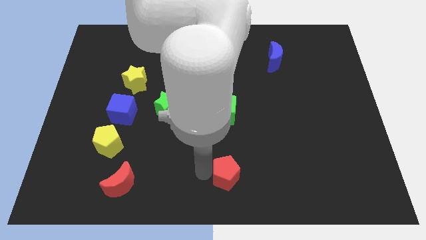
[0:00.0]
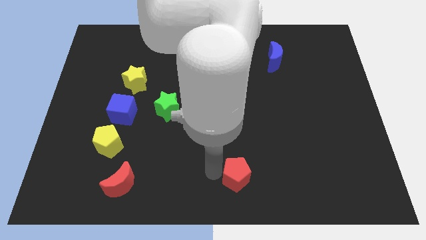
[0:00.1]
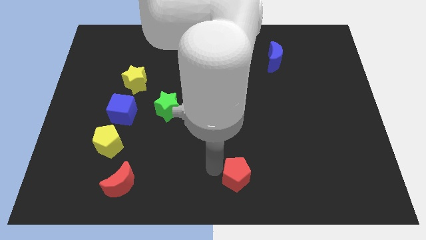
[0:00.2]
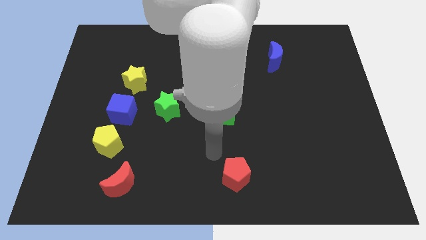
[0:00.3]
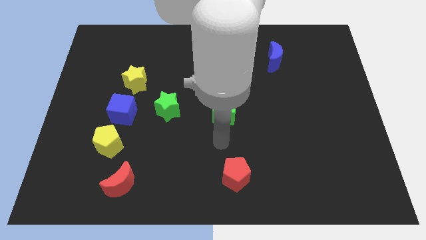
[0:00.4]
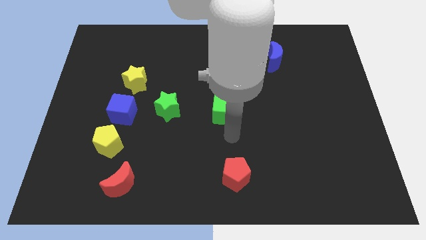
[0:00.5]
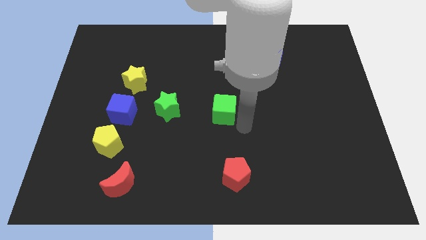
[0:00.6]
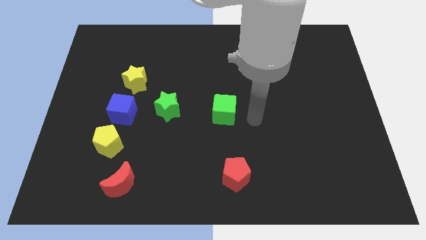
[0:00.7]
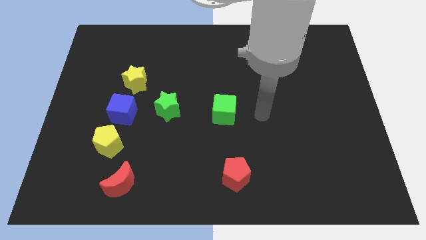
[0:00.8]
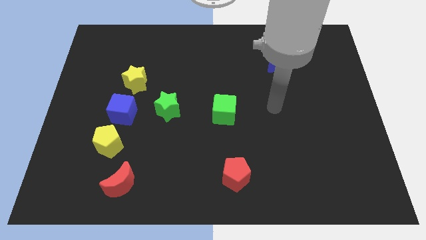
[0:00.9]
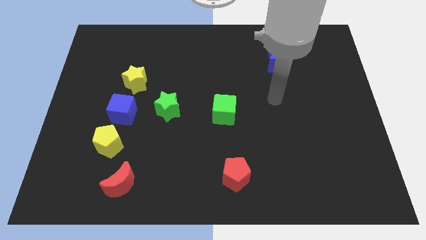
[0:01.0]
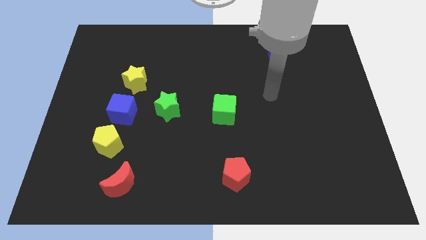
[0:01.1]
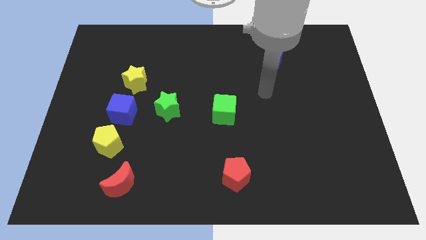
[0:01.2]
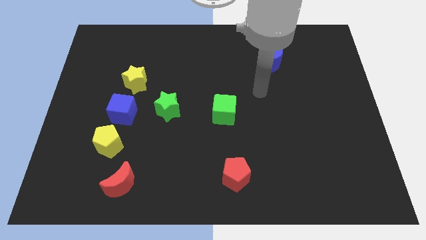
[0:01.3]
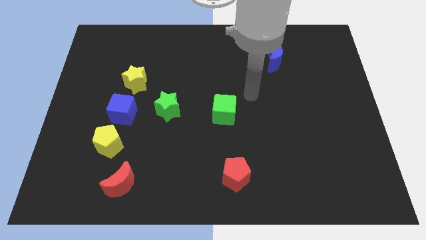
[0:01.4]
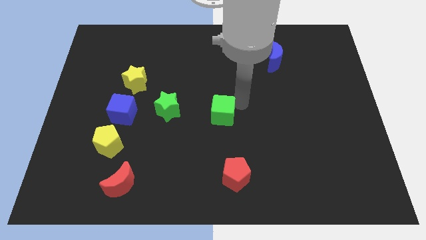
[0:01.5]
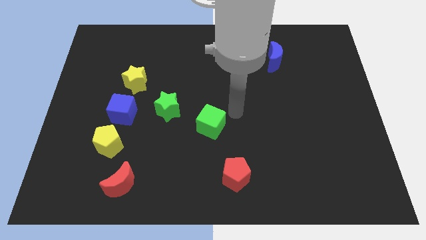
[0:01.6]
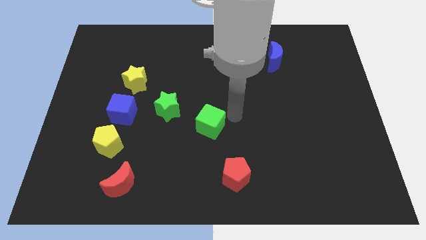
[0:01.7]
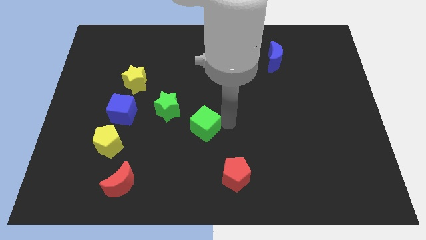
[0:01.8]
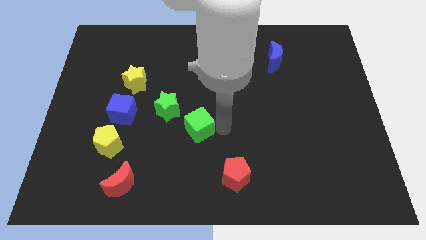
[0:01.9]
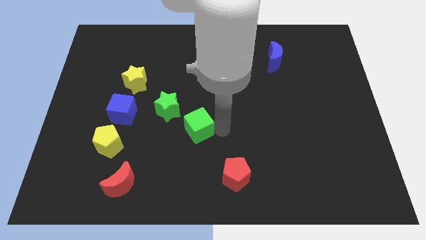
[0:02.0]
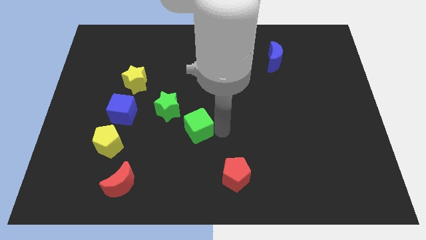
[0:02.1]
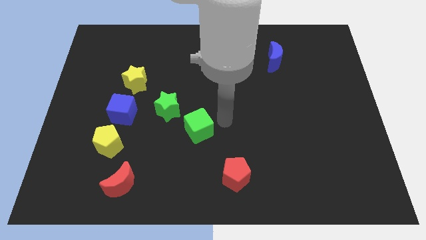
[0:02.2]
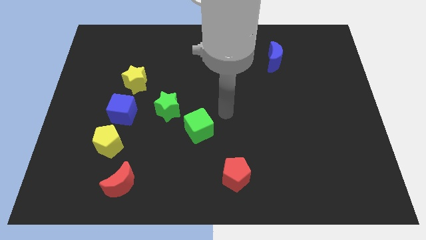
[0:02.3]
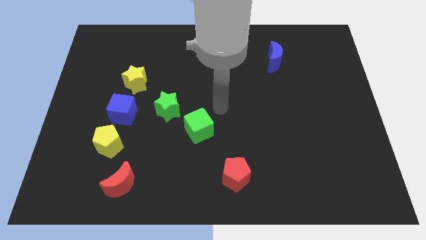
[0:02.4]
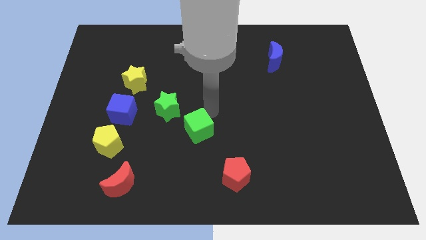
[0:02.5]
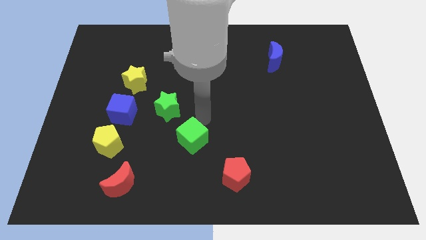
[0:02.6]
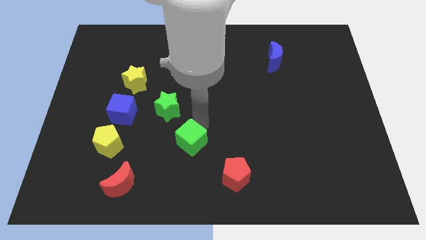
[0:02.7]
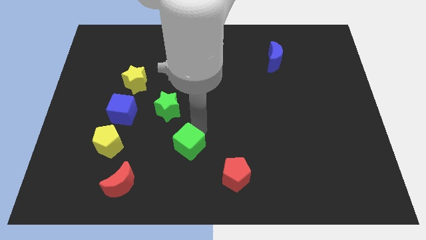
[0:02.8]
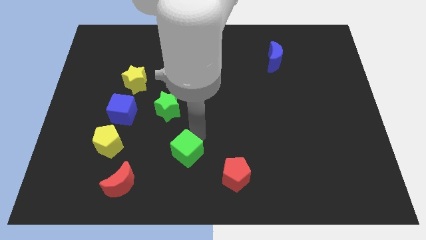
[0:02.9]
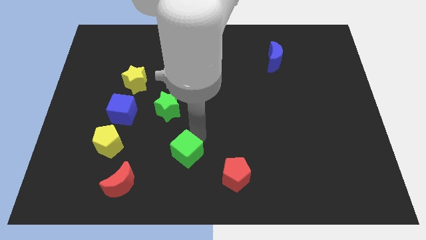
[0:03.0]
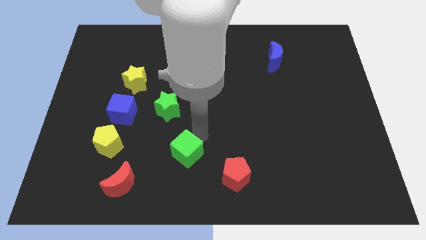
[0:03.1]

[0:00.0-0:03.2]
push green cube diagonally to green star

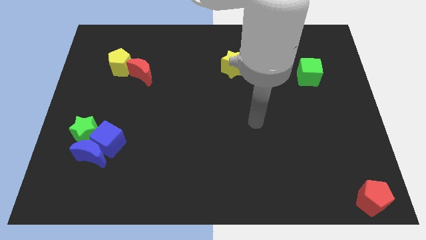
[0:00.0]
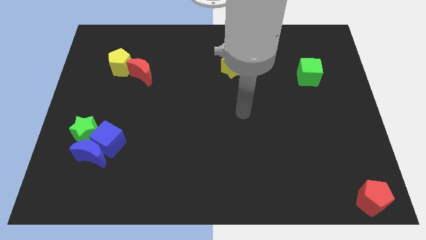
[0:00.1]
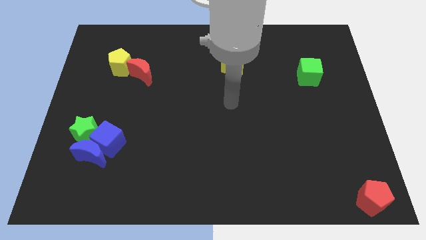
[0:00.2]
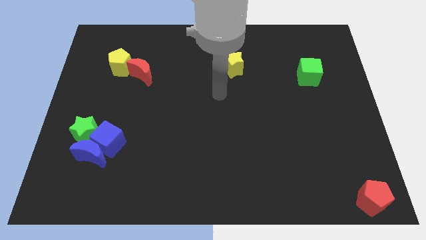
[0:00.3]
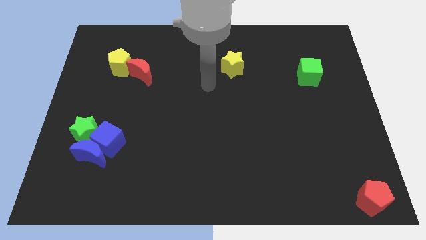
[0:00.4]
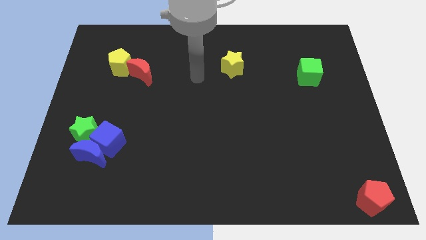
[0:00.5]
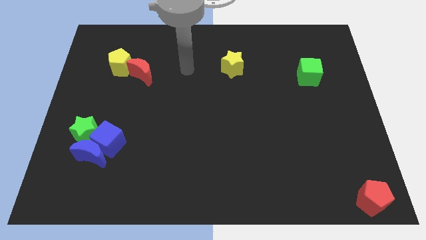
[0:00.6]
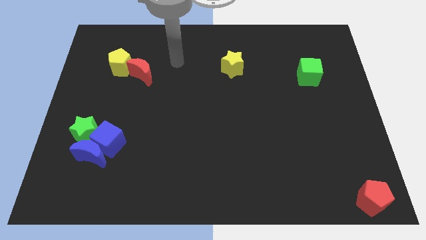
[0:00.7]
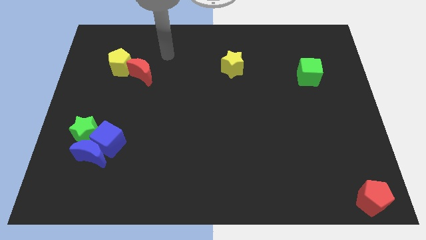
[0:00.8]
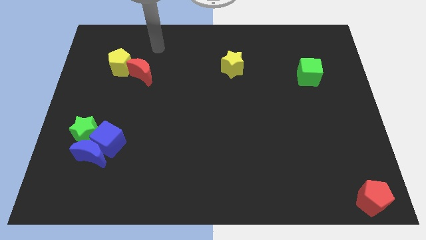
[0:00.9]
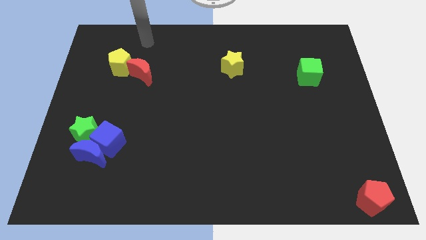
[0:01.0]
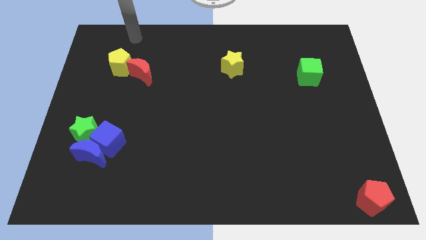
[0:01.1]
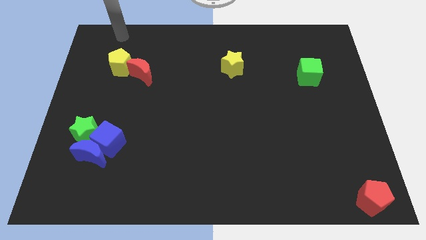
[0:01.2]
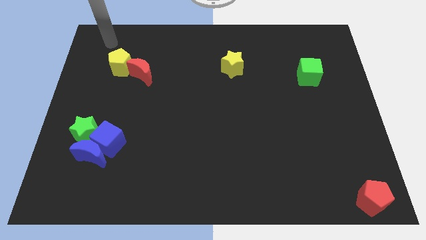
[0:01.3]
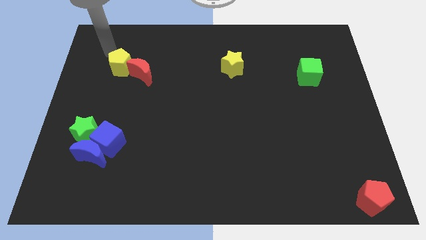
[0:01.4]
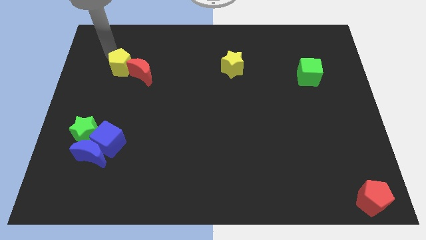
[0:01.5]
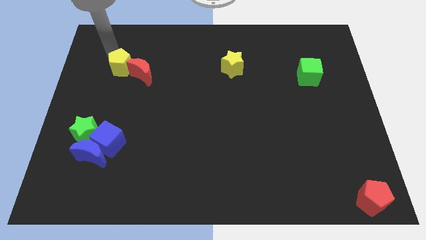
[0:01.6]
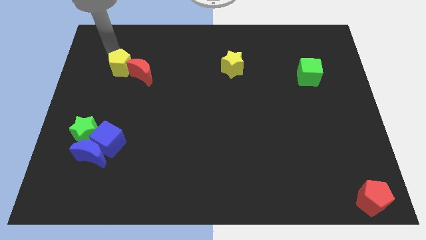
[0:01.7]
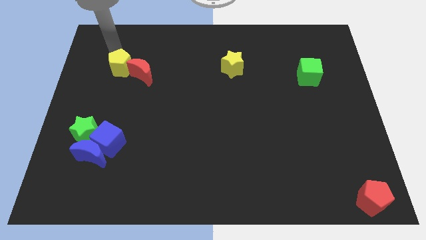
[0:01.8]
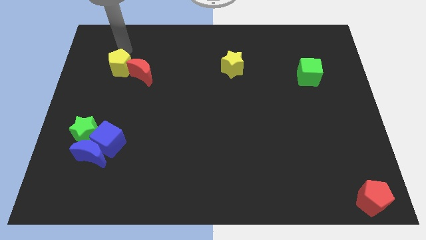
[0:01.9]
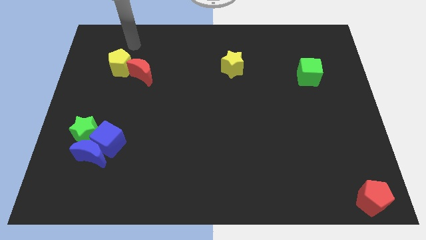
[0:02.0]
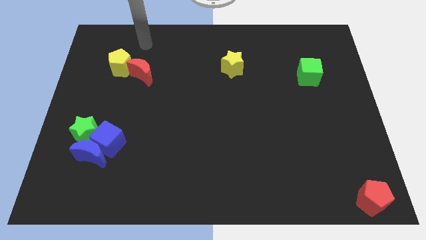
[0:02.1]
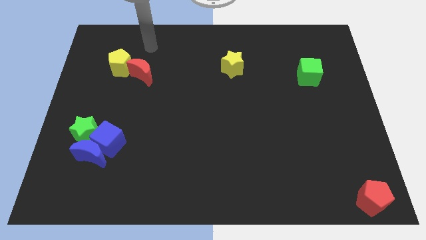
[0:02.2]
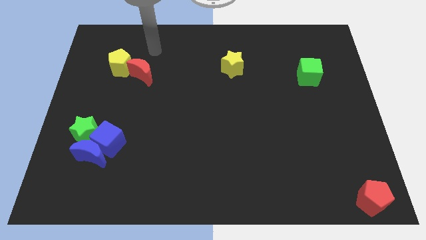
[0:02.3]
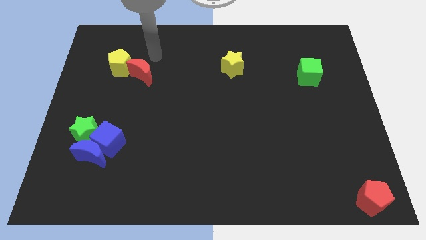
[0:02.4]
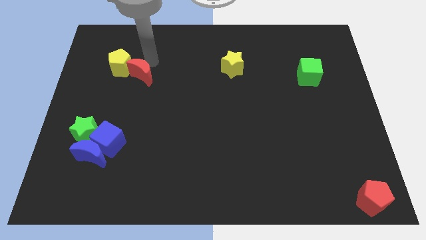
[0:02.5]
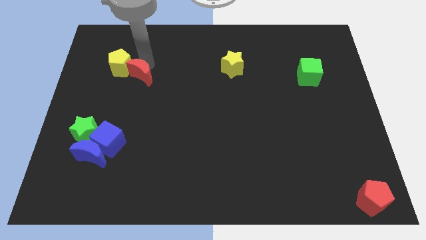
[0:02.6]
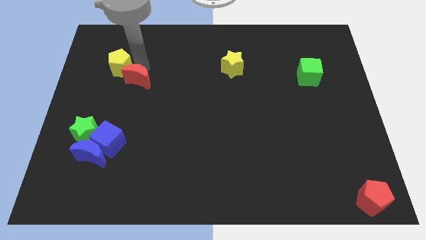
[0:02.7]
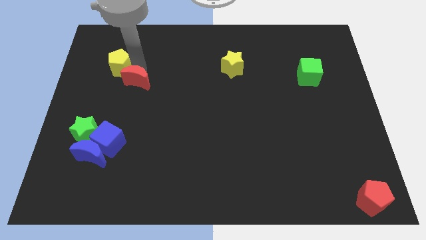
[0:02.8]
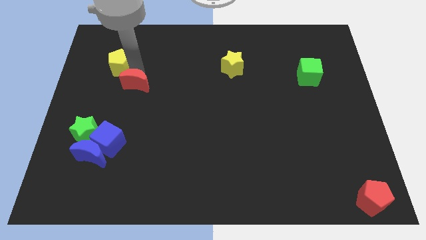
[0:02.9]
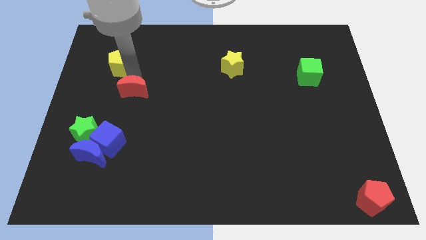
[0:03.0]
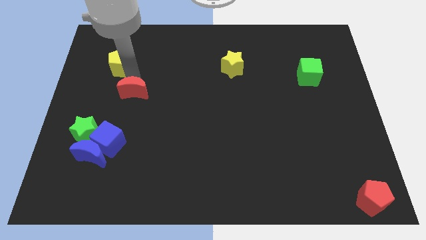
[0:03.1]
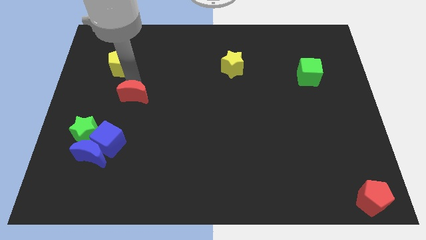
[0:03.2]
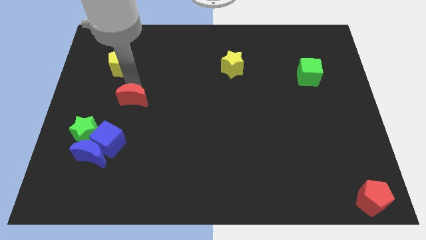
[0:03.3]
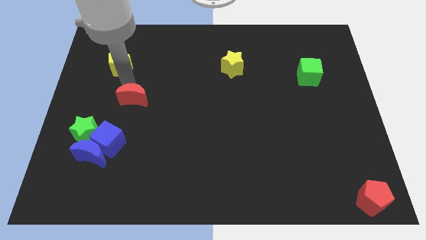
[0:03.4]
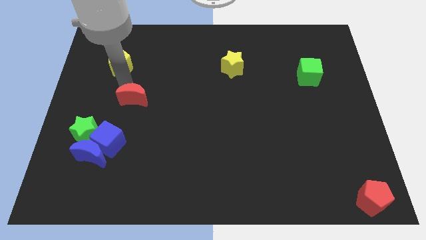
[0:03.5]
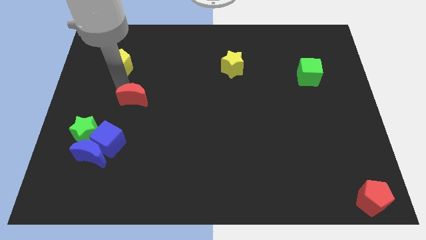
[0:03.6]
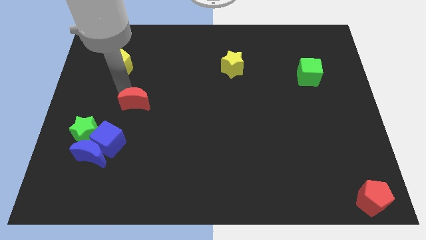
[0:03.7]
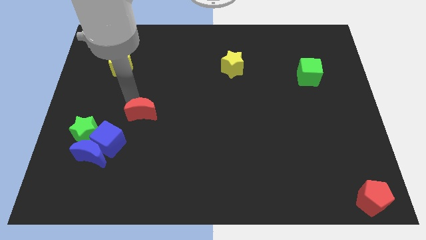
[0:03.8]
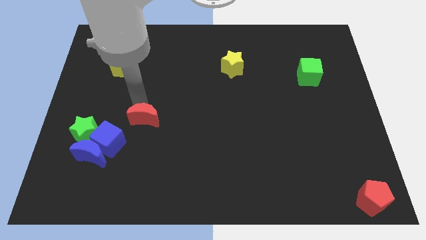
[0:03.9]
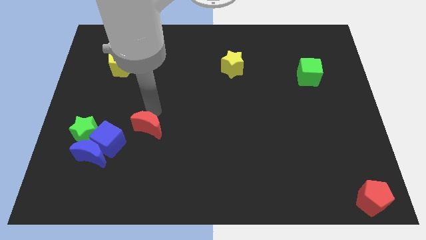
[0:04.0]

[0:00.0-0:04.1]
separate red moon from yellow pentagon

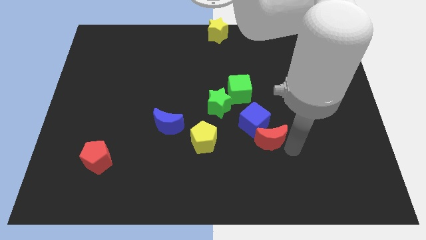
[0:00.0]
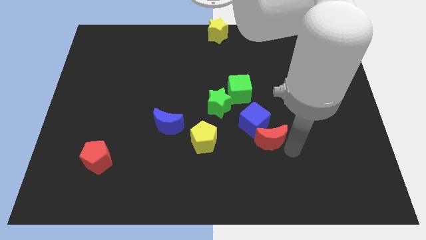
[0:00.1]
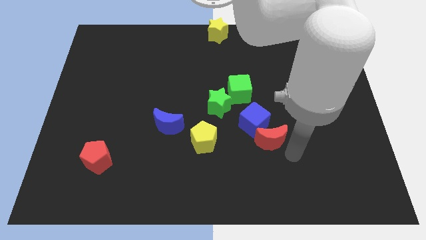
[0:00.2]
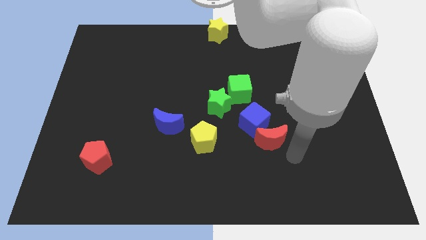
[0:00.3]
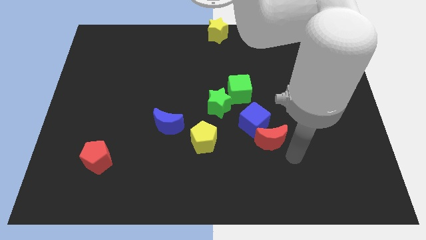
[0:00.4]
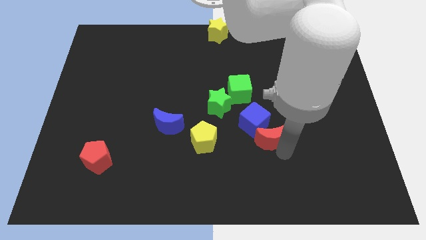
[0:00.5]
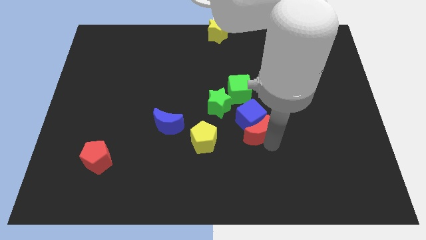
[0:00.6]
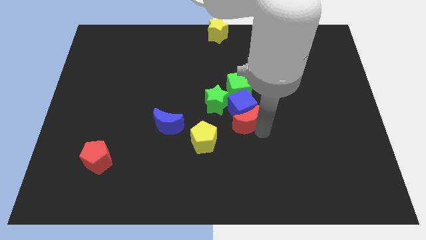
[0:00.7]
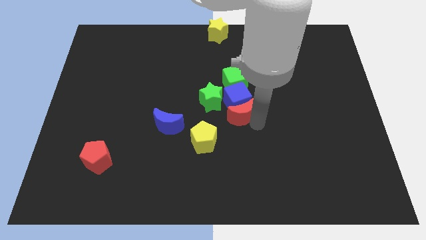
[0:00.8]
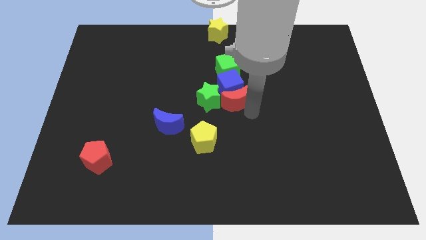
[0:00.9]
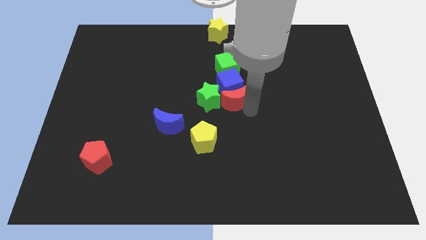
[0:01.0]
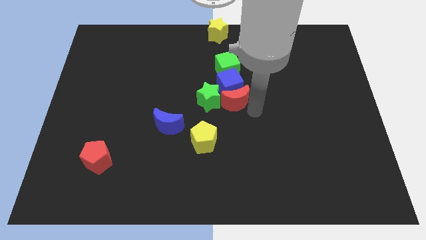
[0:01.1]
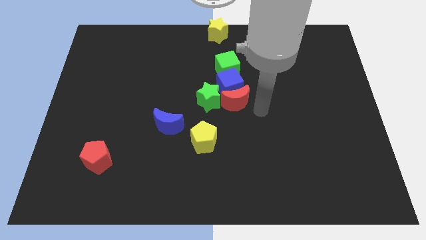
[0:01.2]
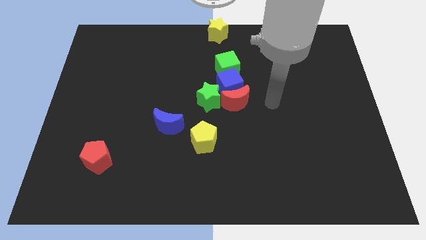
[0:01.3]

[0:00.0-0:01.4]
drag blue cube and green cube upside of the board with the help of red crescent

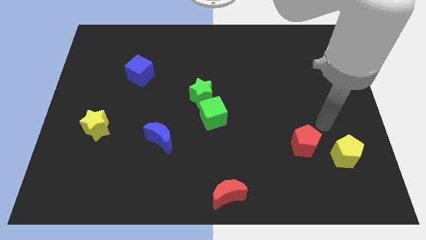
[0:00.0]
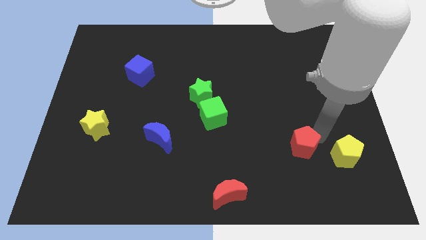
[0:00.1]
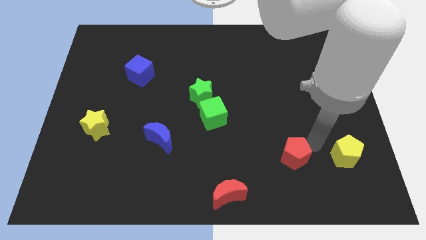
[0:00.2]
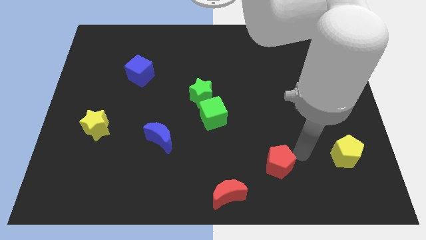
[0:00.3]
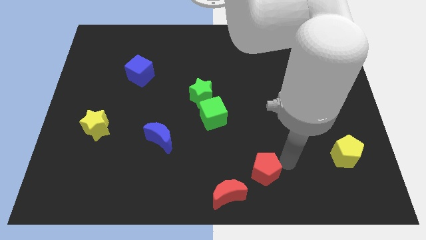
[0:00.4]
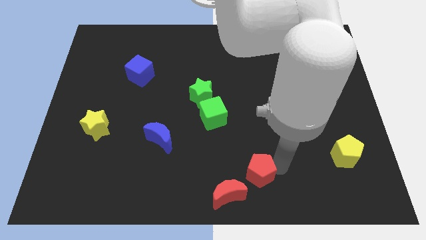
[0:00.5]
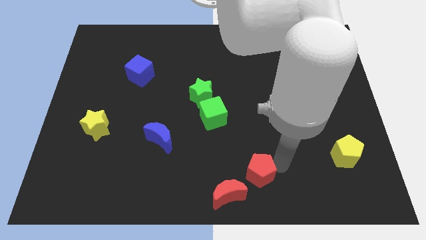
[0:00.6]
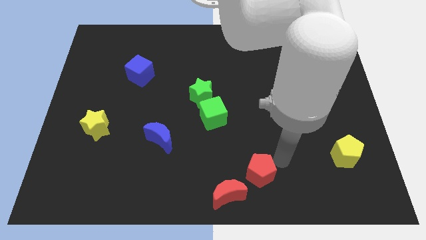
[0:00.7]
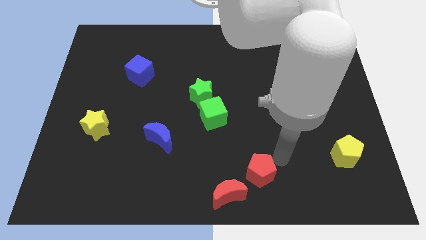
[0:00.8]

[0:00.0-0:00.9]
push the red pentagon towards the right side of the red crescent
